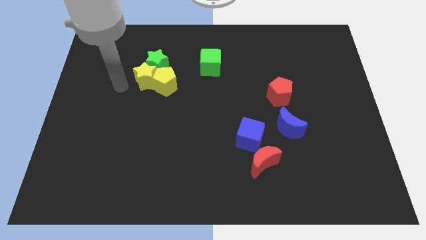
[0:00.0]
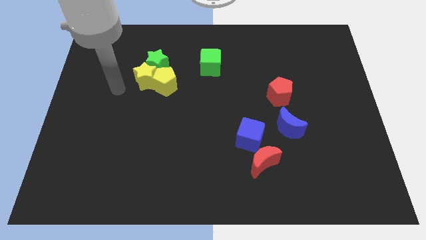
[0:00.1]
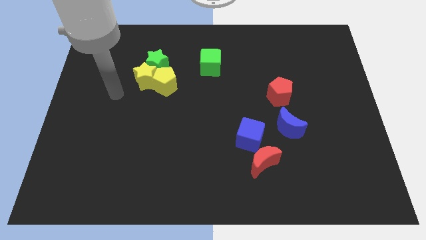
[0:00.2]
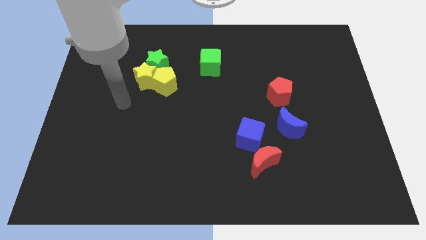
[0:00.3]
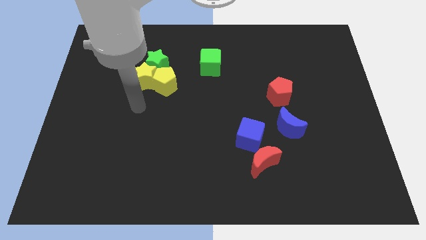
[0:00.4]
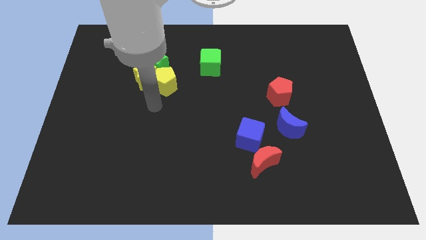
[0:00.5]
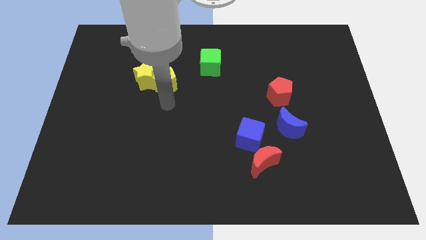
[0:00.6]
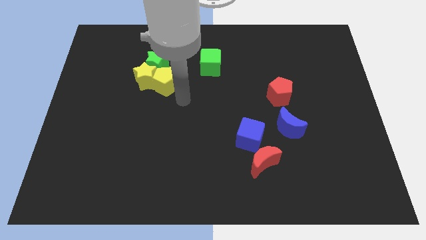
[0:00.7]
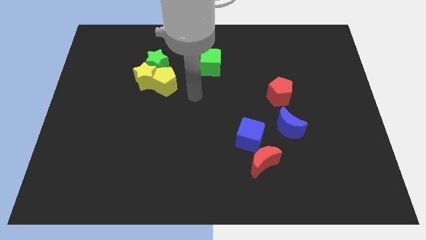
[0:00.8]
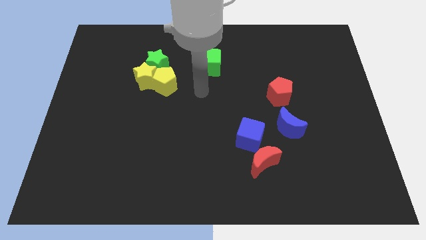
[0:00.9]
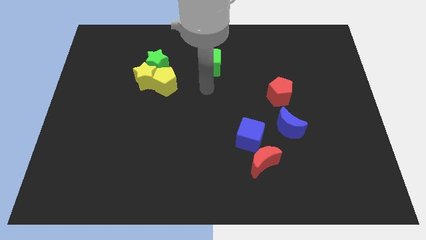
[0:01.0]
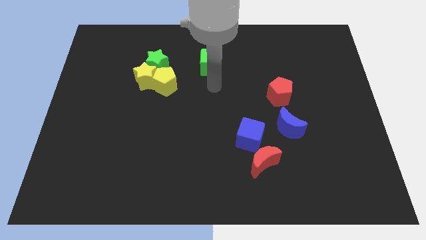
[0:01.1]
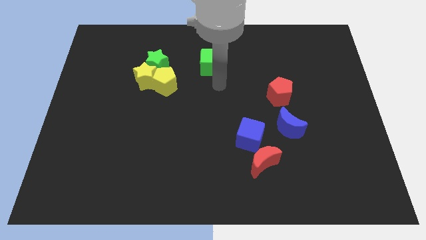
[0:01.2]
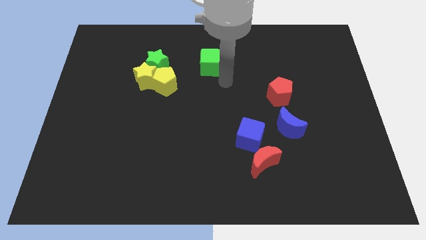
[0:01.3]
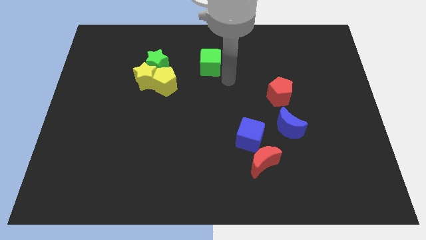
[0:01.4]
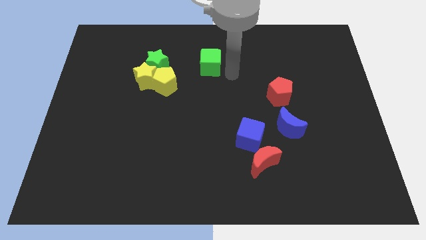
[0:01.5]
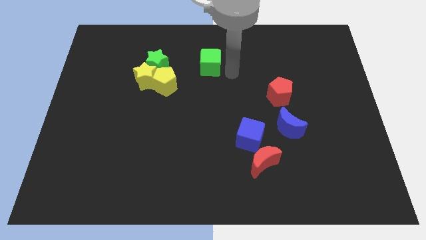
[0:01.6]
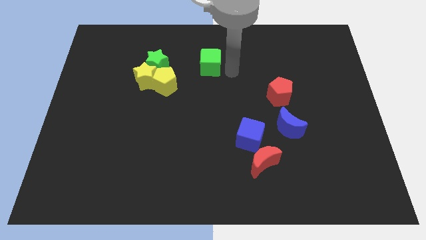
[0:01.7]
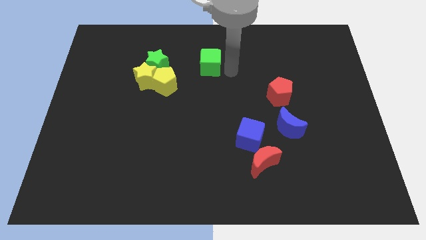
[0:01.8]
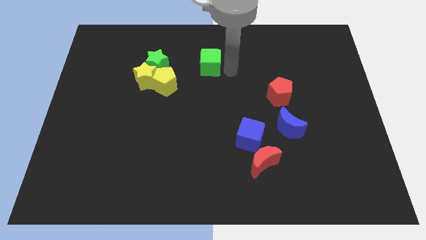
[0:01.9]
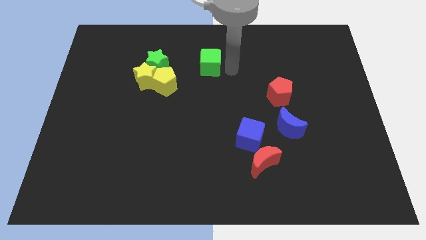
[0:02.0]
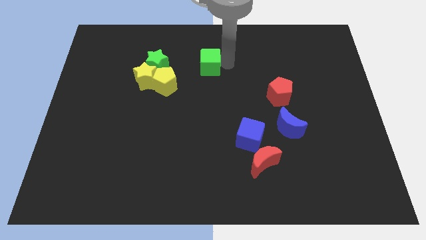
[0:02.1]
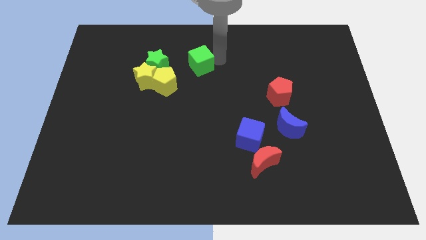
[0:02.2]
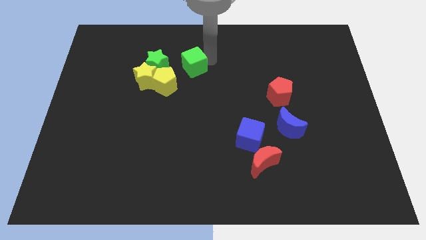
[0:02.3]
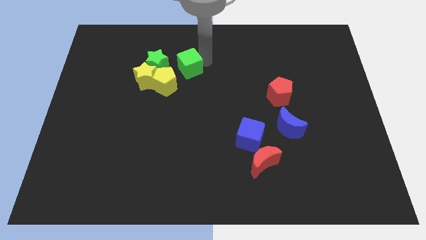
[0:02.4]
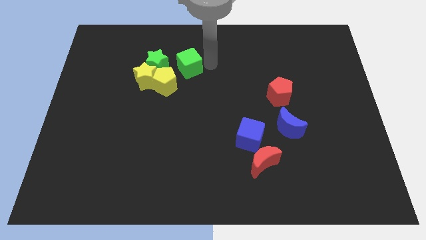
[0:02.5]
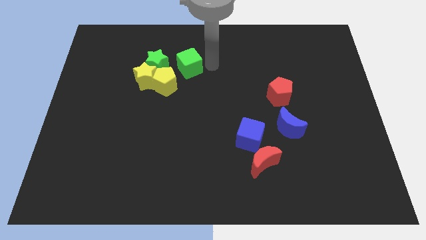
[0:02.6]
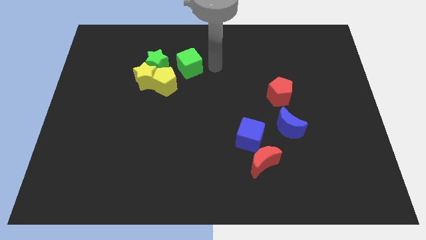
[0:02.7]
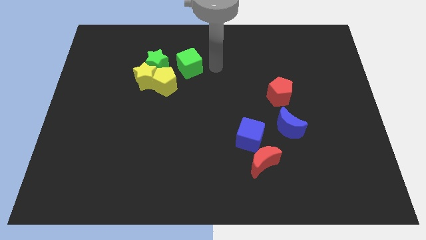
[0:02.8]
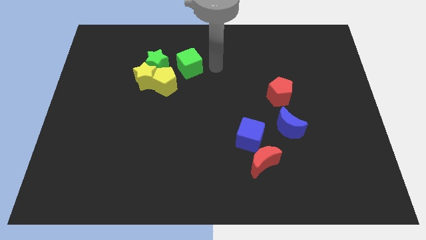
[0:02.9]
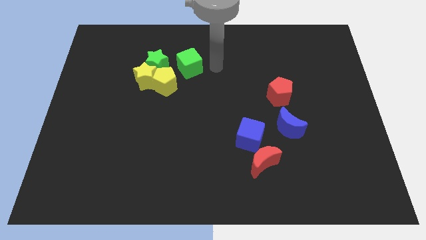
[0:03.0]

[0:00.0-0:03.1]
move the green cube to the right of the green star

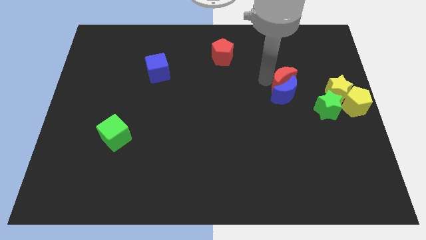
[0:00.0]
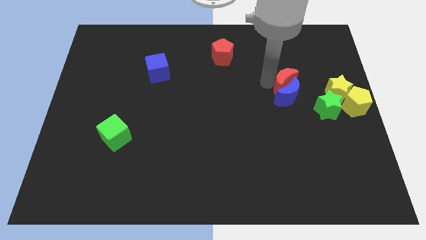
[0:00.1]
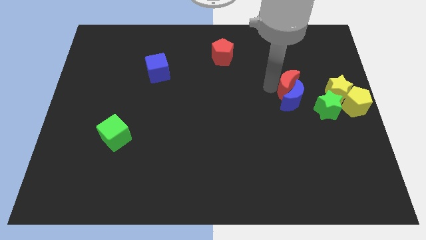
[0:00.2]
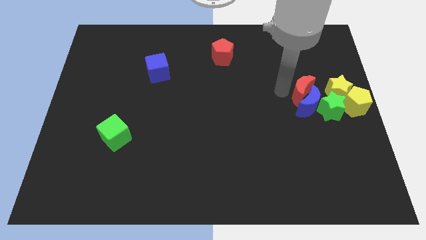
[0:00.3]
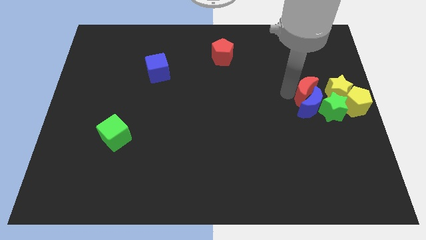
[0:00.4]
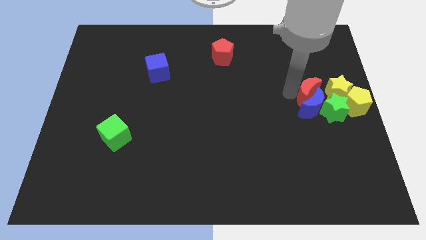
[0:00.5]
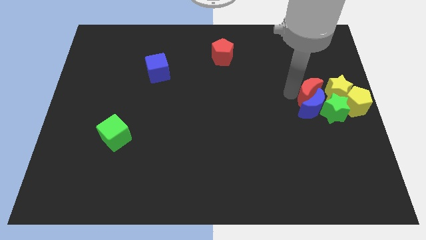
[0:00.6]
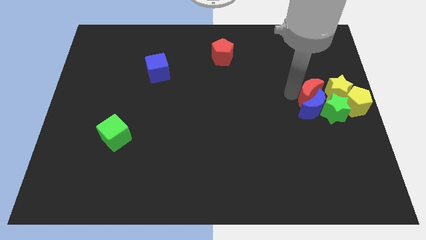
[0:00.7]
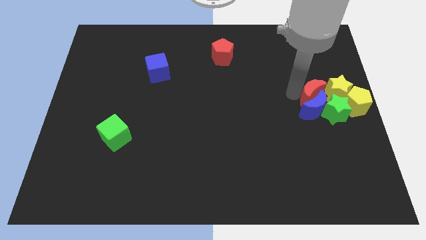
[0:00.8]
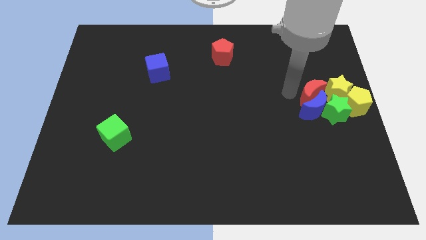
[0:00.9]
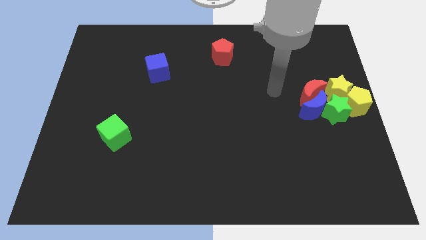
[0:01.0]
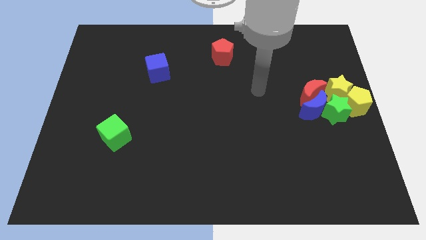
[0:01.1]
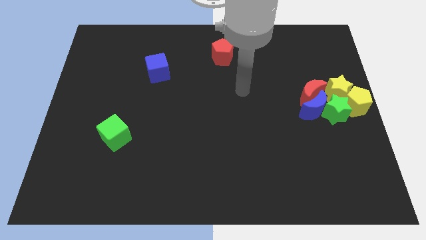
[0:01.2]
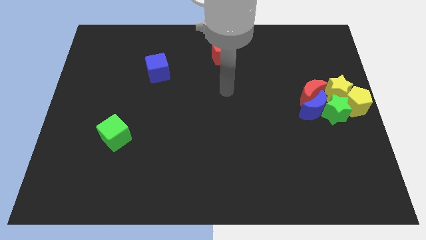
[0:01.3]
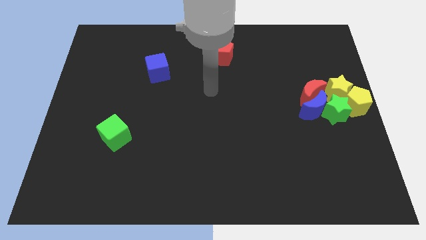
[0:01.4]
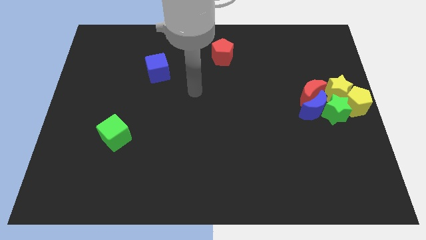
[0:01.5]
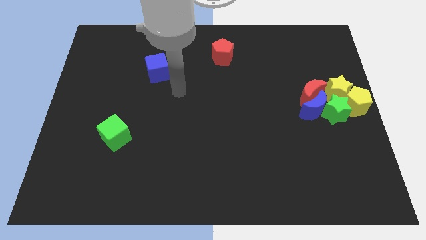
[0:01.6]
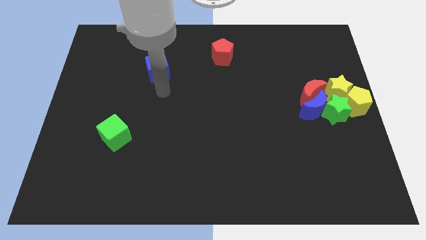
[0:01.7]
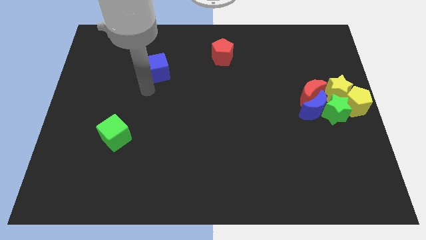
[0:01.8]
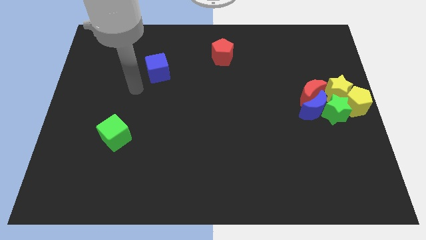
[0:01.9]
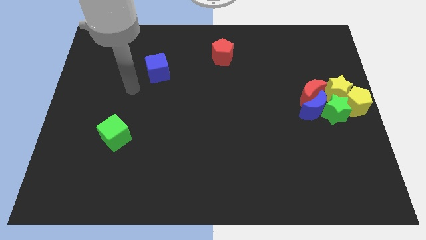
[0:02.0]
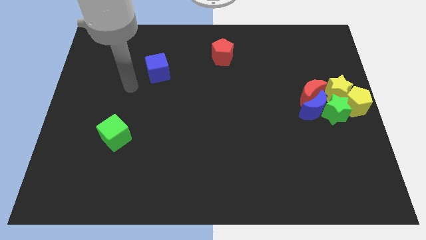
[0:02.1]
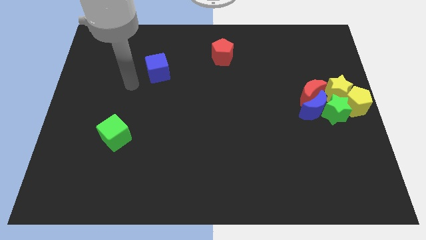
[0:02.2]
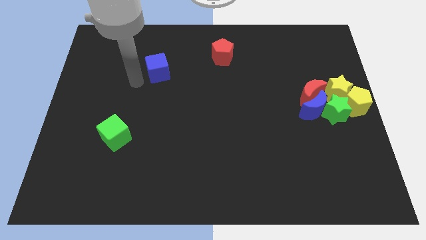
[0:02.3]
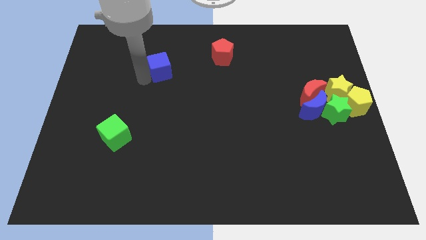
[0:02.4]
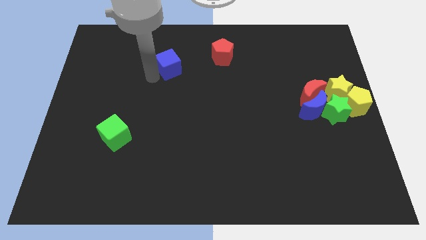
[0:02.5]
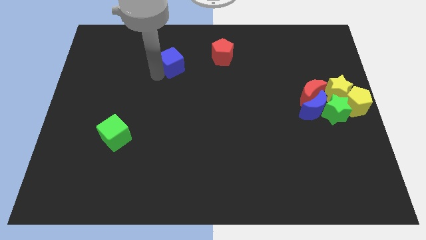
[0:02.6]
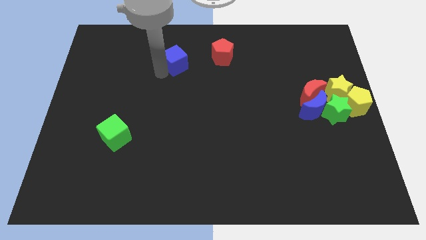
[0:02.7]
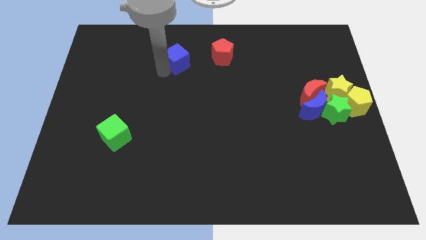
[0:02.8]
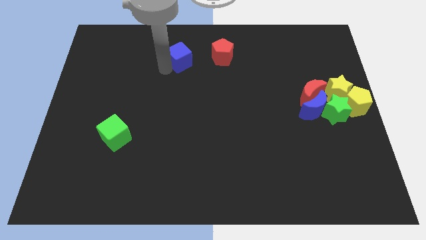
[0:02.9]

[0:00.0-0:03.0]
place your arm from red crescent to the blue cube

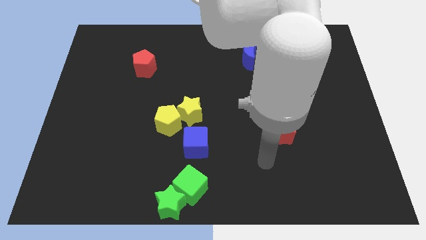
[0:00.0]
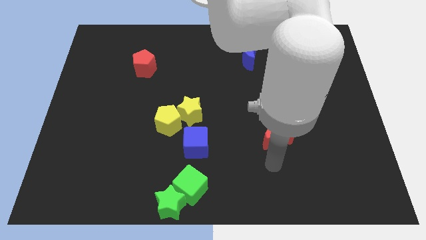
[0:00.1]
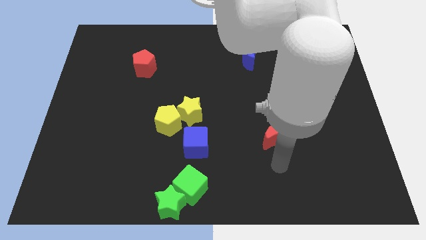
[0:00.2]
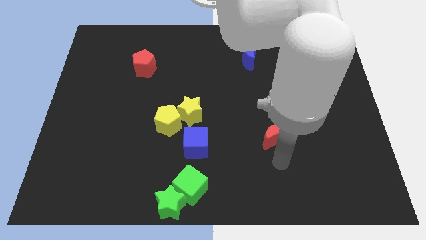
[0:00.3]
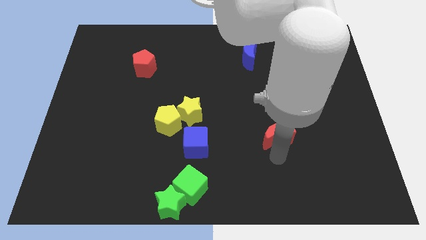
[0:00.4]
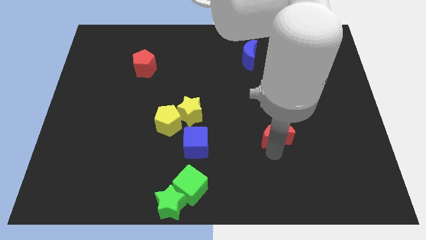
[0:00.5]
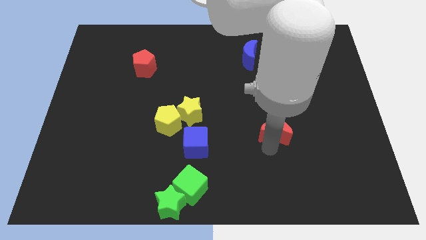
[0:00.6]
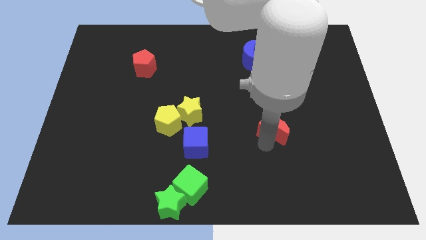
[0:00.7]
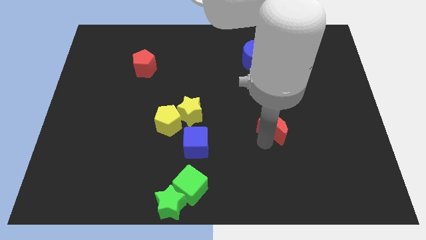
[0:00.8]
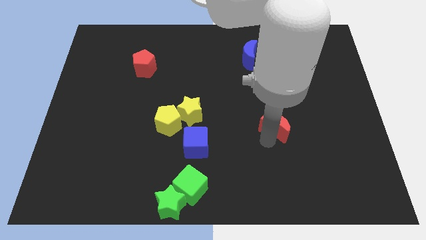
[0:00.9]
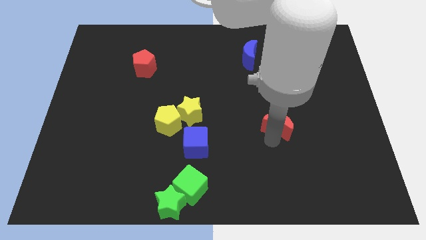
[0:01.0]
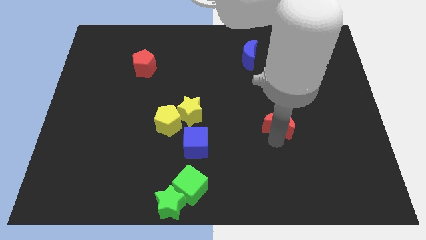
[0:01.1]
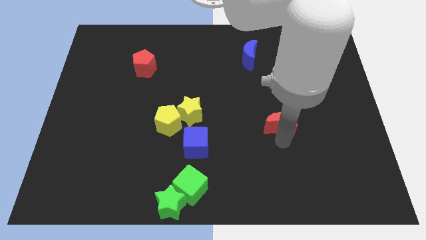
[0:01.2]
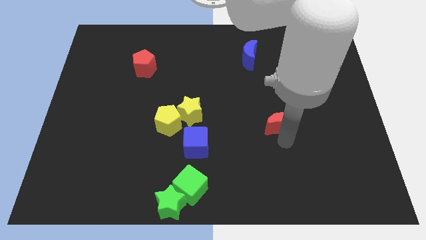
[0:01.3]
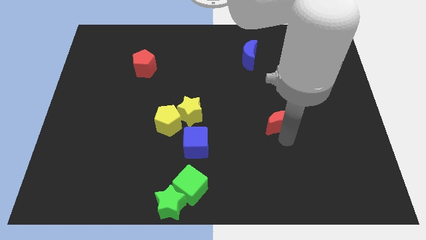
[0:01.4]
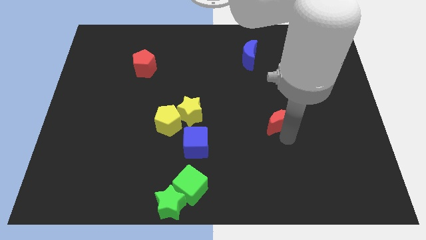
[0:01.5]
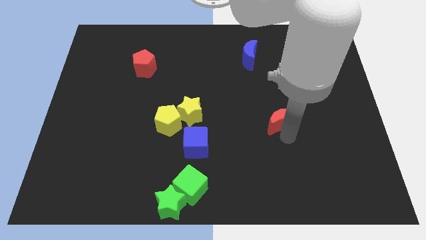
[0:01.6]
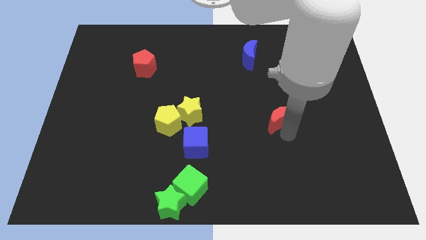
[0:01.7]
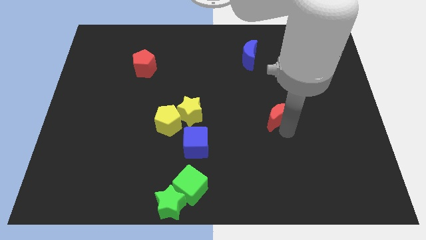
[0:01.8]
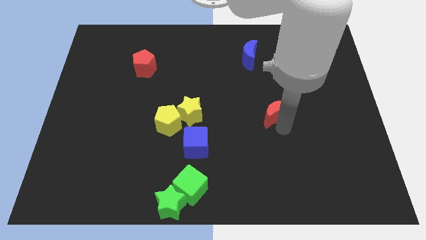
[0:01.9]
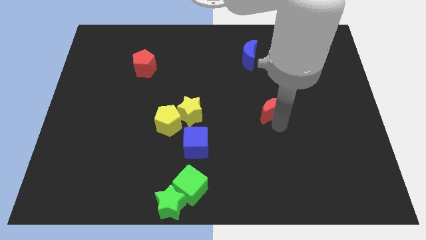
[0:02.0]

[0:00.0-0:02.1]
put the red crescent to the right of the yellow star

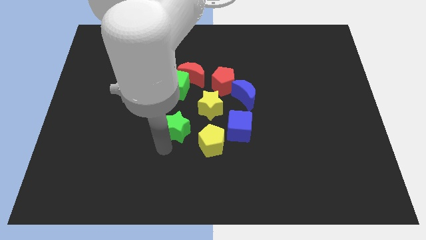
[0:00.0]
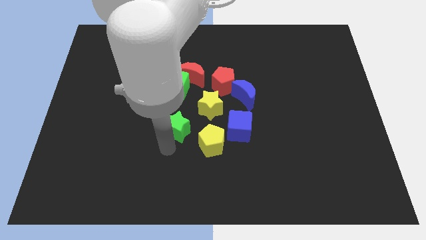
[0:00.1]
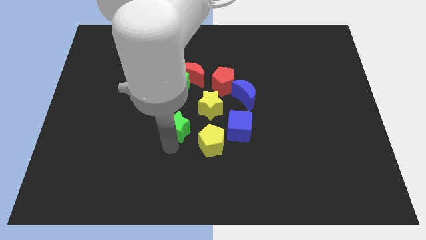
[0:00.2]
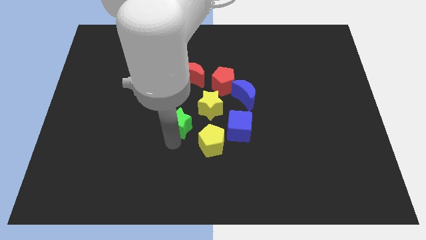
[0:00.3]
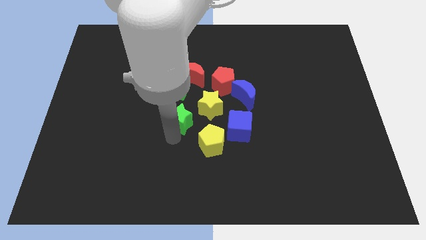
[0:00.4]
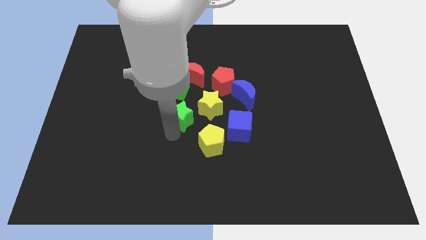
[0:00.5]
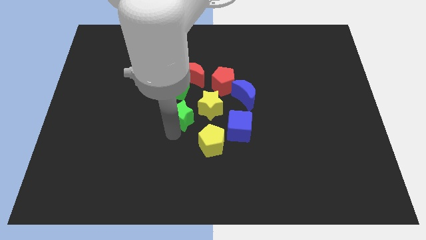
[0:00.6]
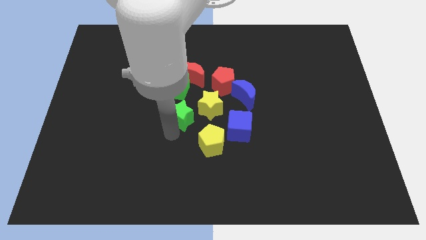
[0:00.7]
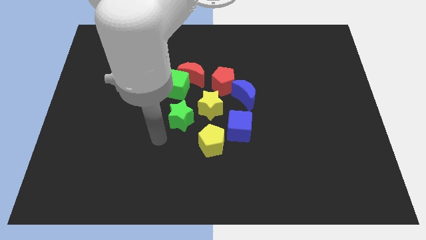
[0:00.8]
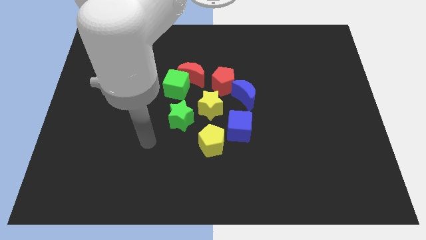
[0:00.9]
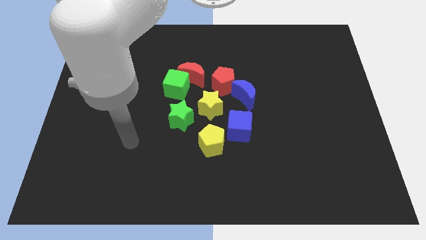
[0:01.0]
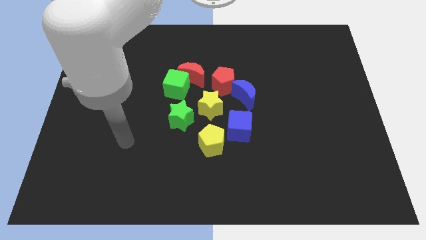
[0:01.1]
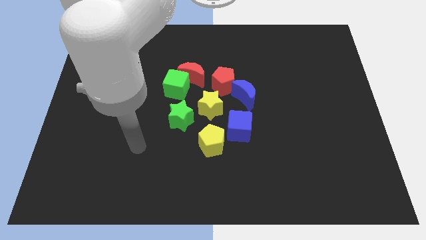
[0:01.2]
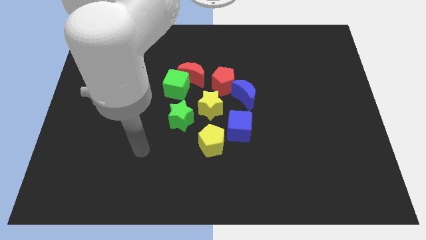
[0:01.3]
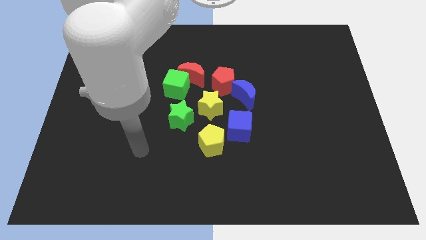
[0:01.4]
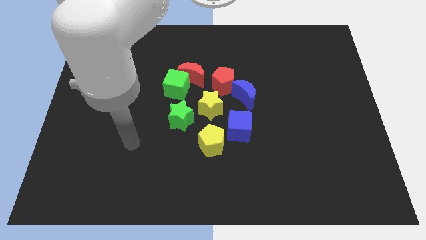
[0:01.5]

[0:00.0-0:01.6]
place the green star below to the green cube
